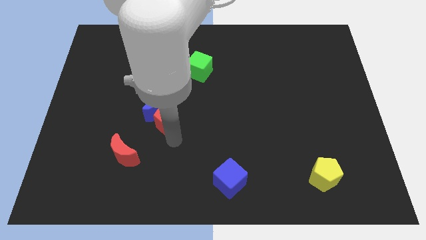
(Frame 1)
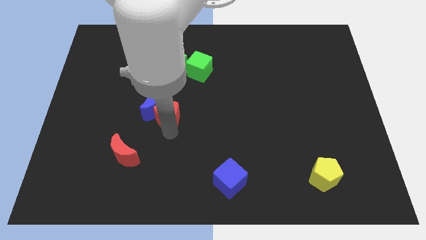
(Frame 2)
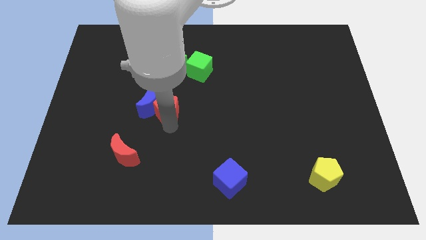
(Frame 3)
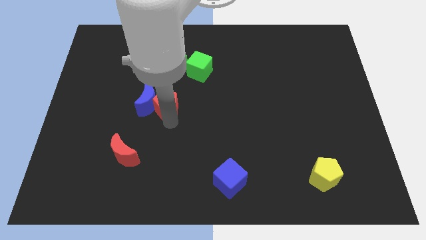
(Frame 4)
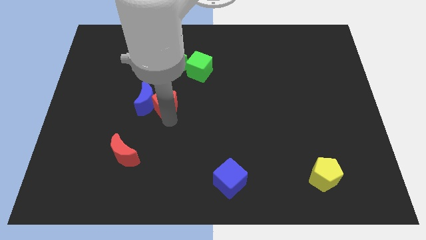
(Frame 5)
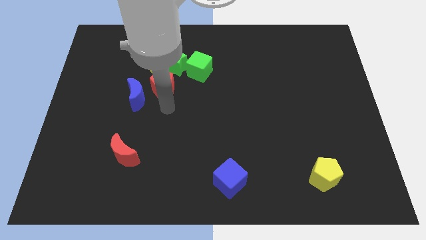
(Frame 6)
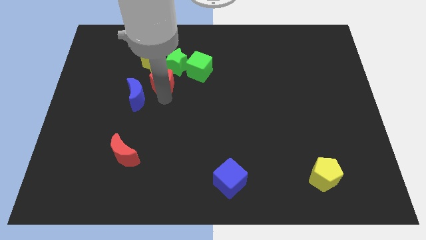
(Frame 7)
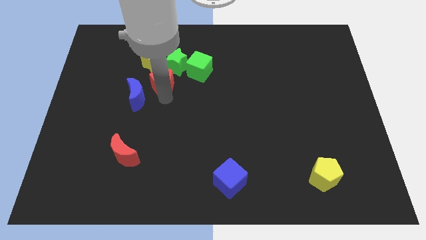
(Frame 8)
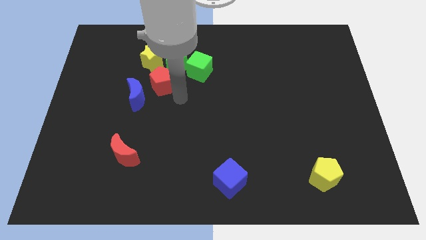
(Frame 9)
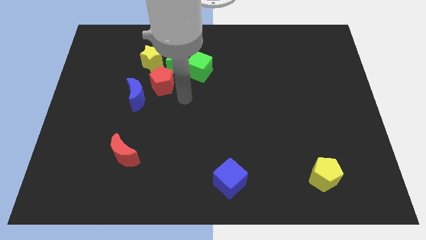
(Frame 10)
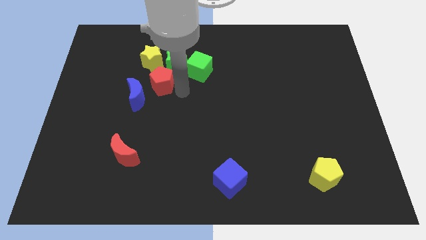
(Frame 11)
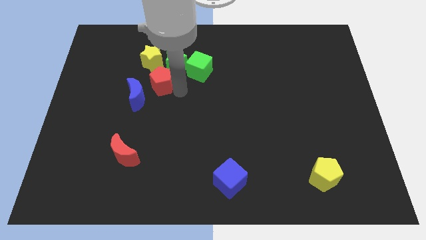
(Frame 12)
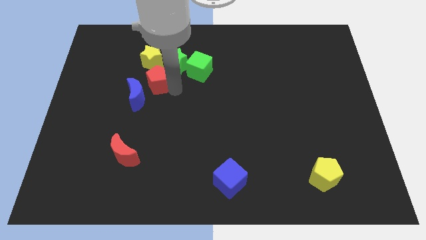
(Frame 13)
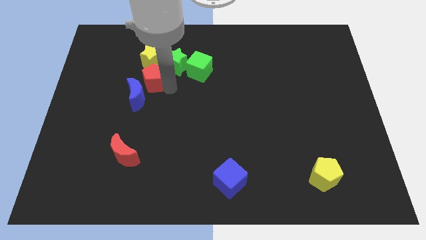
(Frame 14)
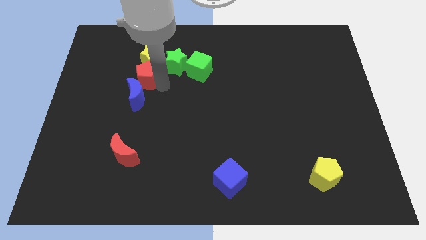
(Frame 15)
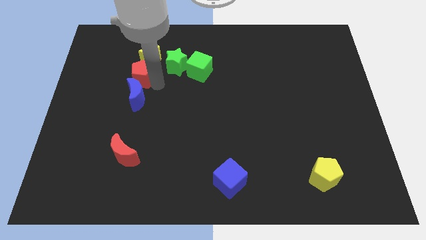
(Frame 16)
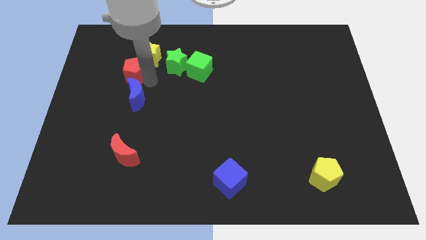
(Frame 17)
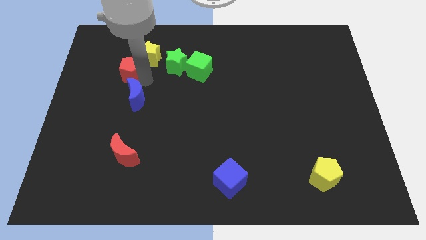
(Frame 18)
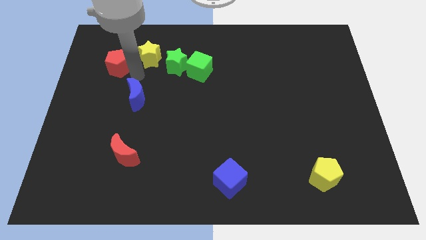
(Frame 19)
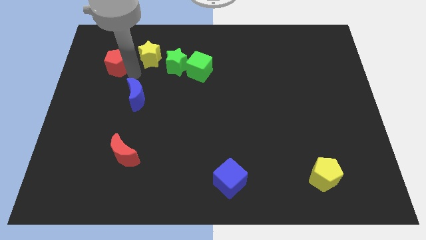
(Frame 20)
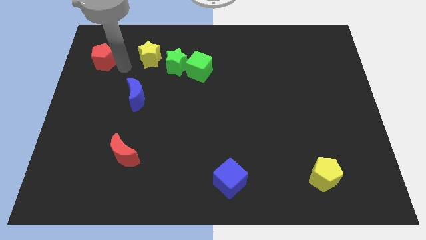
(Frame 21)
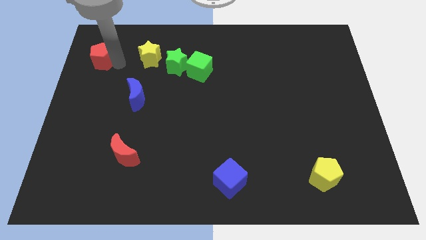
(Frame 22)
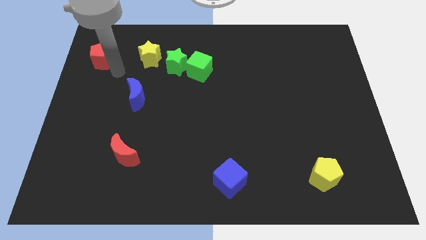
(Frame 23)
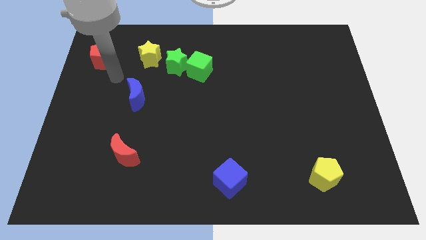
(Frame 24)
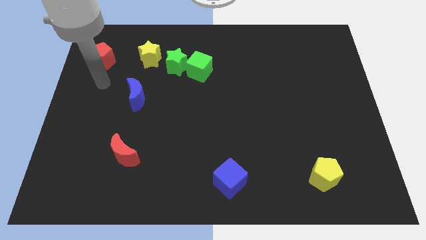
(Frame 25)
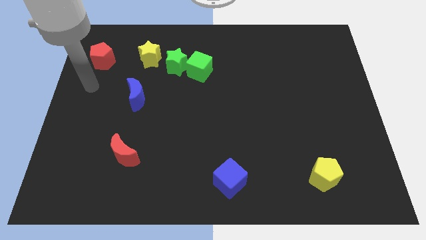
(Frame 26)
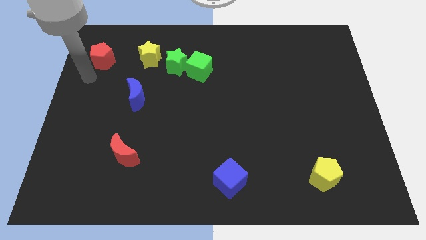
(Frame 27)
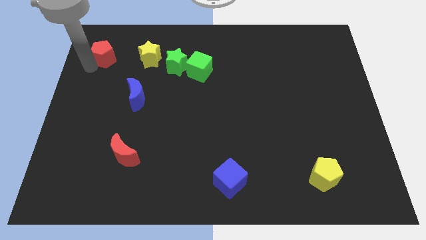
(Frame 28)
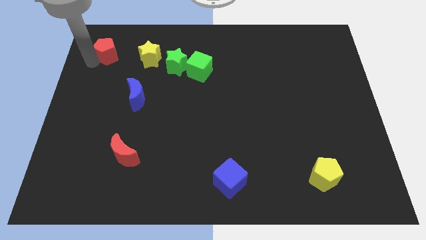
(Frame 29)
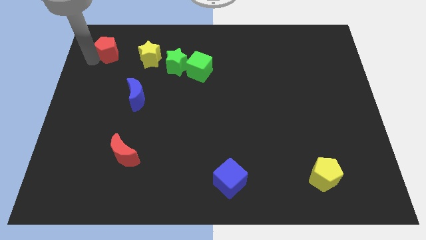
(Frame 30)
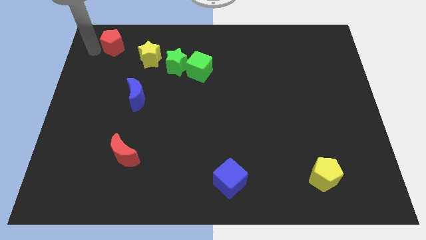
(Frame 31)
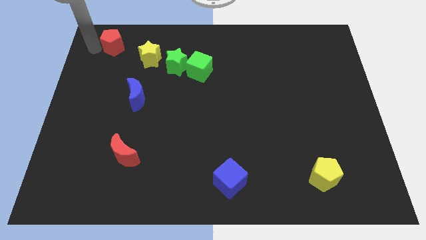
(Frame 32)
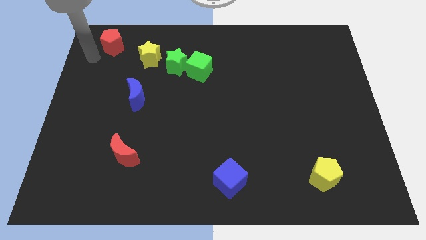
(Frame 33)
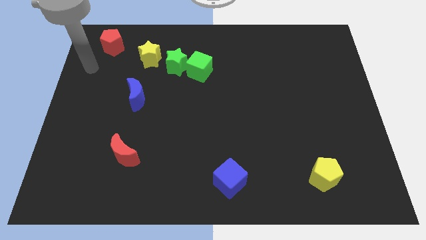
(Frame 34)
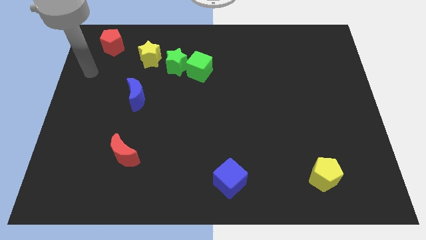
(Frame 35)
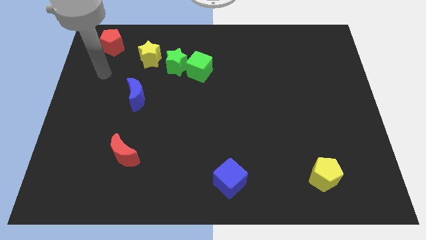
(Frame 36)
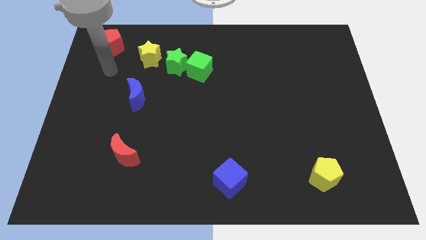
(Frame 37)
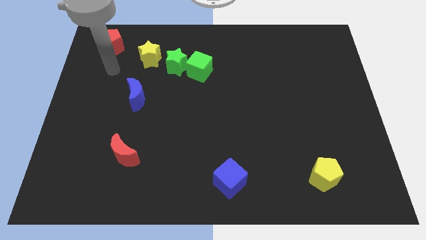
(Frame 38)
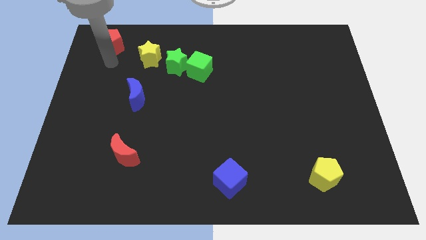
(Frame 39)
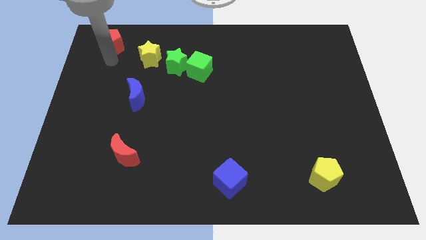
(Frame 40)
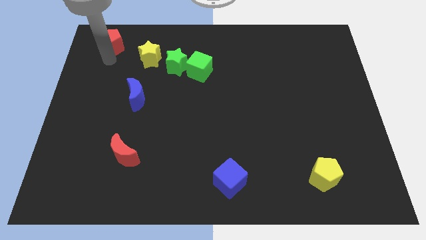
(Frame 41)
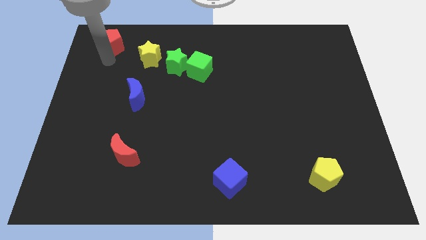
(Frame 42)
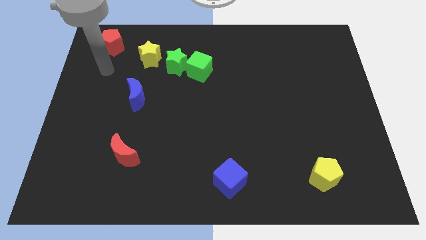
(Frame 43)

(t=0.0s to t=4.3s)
move the red pentagon towards the top left side of the board

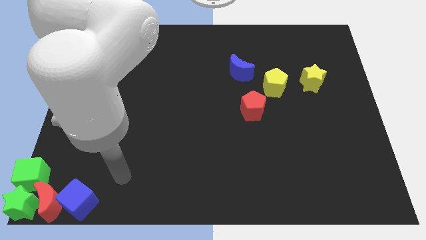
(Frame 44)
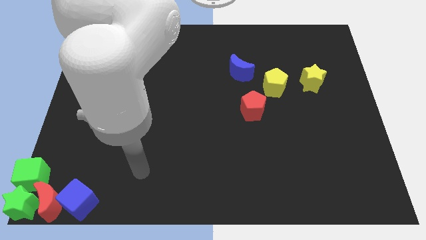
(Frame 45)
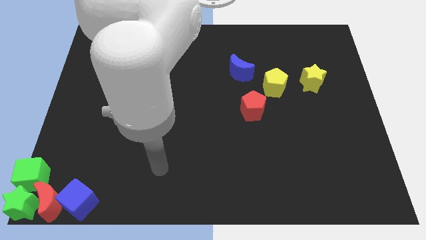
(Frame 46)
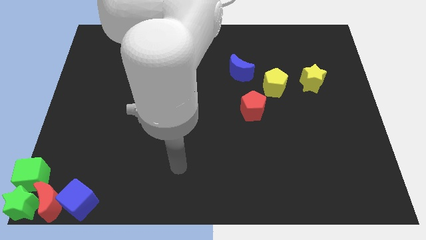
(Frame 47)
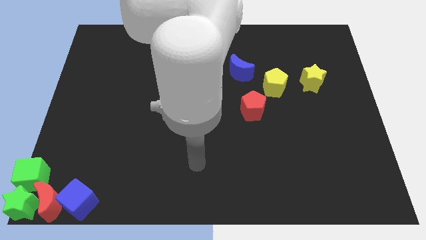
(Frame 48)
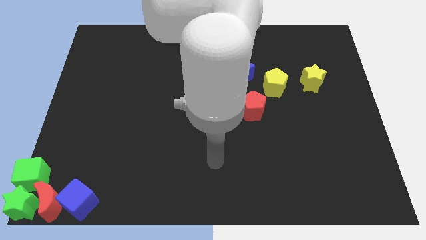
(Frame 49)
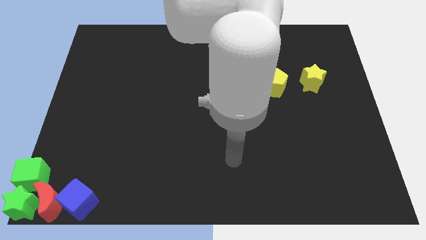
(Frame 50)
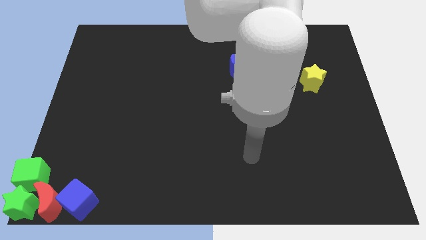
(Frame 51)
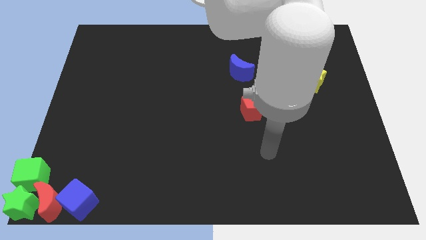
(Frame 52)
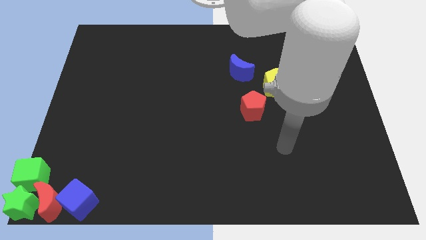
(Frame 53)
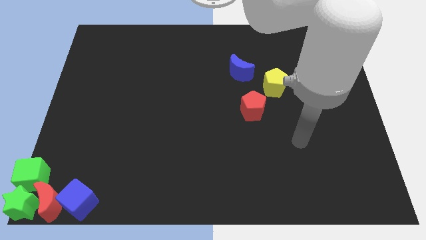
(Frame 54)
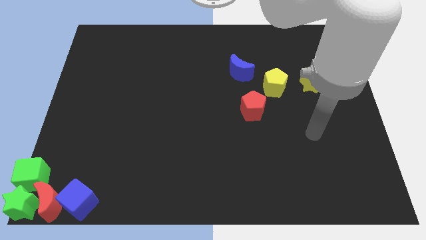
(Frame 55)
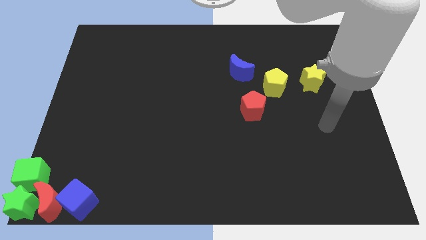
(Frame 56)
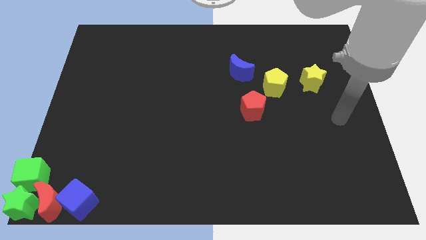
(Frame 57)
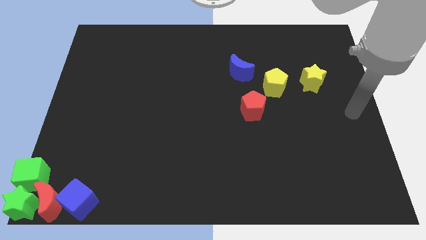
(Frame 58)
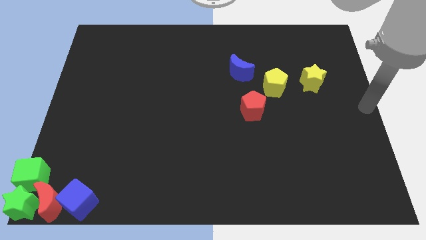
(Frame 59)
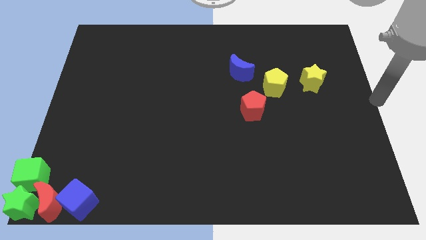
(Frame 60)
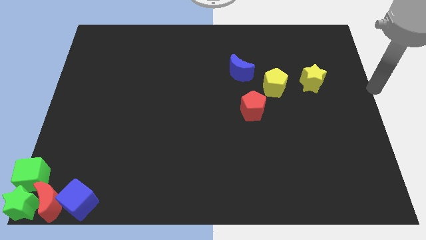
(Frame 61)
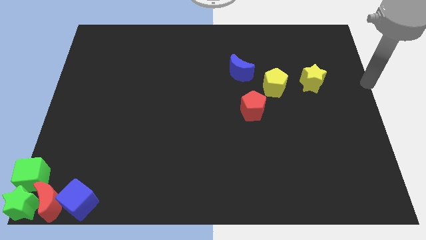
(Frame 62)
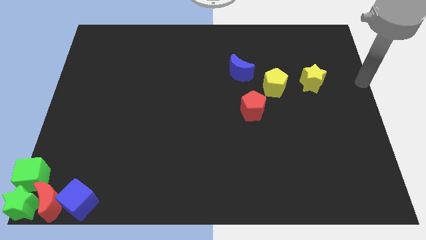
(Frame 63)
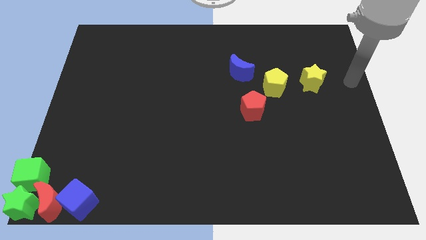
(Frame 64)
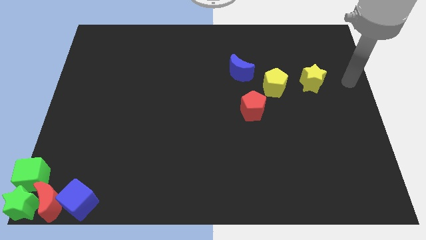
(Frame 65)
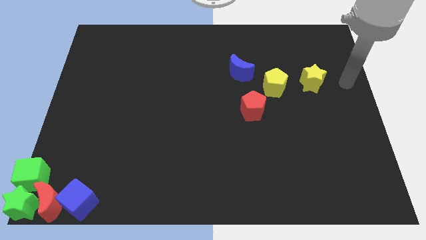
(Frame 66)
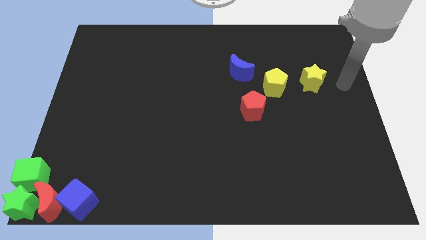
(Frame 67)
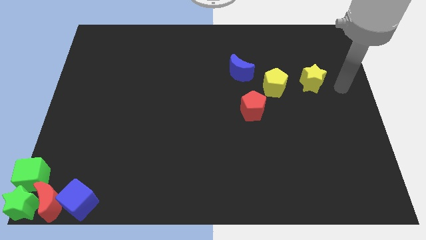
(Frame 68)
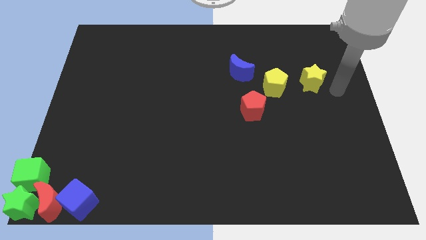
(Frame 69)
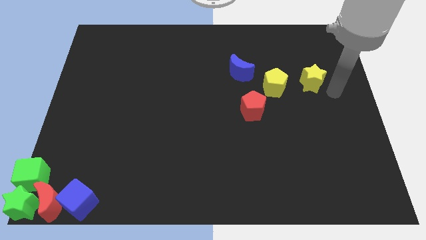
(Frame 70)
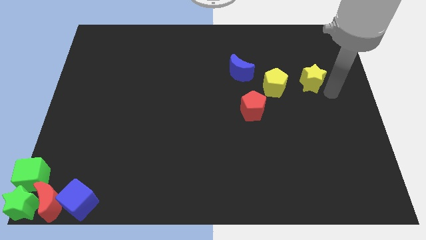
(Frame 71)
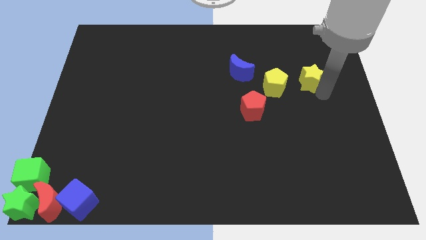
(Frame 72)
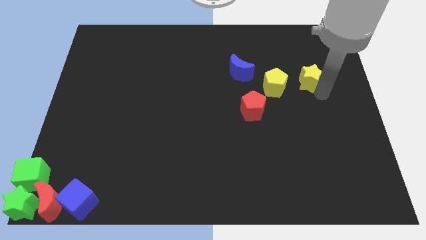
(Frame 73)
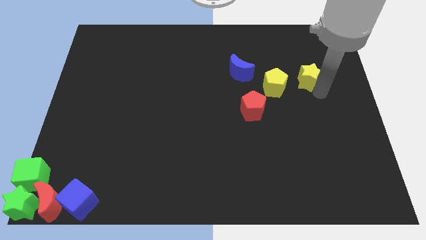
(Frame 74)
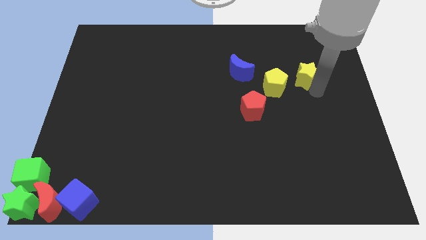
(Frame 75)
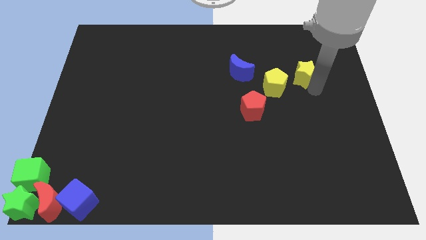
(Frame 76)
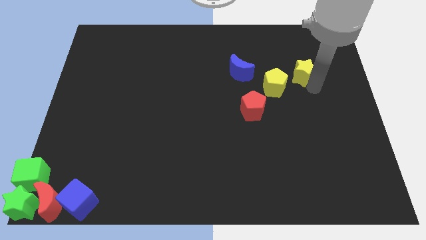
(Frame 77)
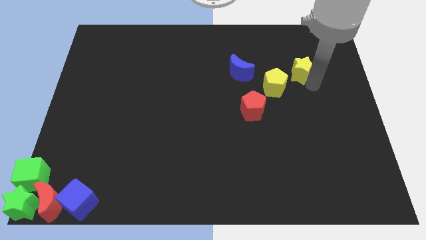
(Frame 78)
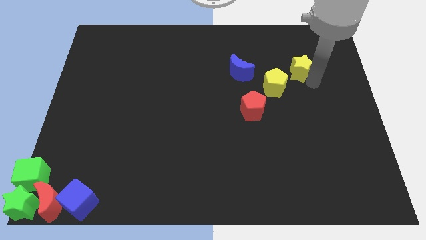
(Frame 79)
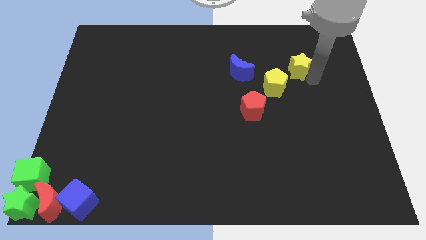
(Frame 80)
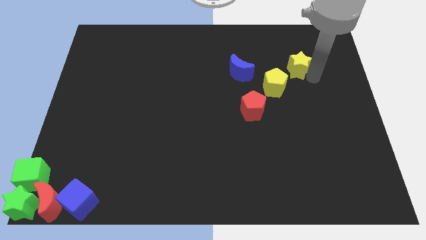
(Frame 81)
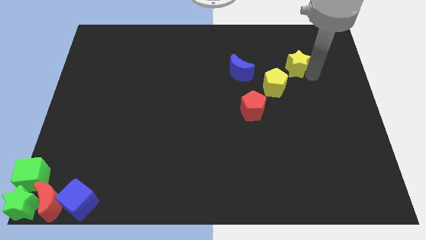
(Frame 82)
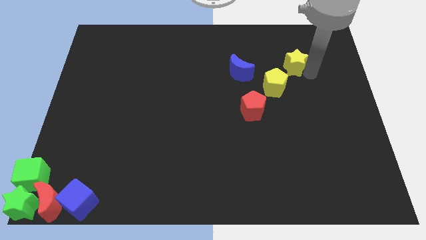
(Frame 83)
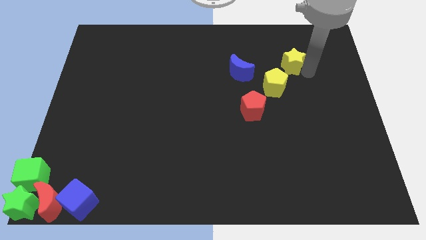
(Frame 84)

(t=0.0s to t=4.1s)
move the yellow star to the top right of the yellow pentagon

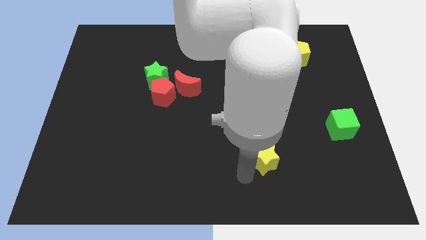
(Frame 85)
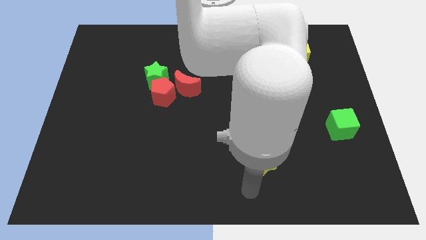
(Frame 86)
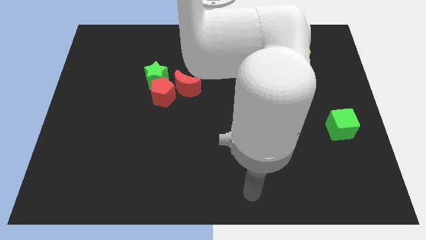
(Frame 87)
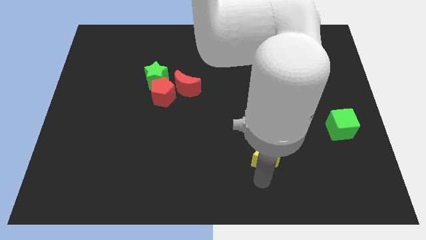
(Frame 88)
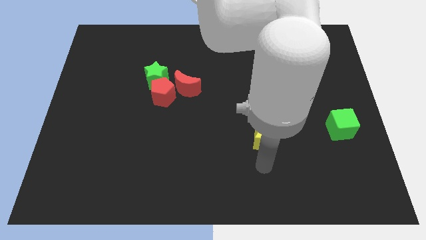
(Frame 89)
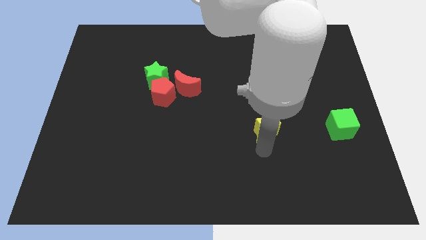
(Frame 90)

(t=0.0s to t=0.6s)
move the yellow star to the left of the green cube
